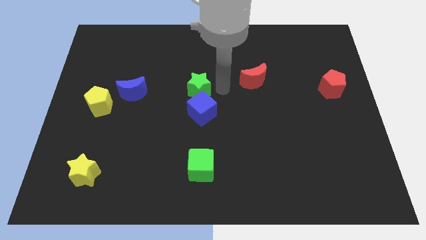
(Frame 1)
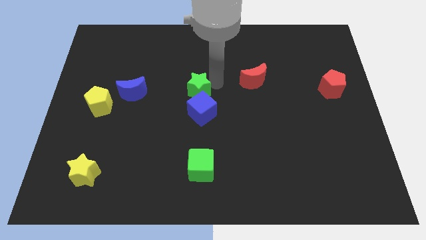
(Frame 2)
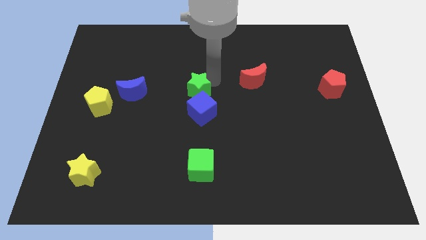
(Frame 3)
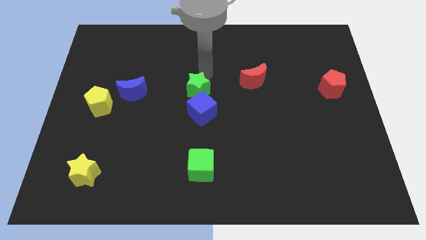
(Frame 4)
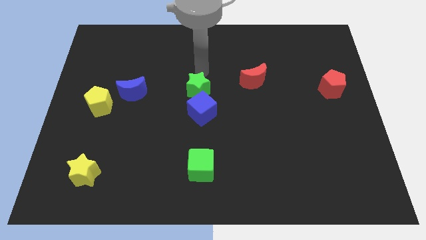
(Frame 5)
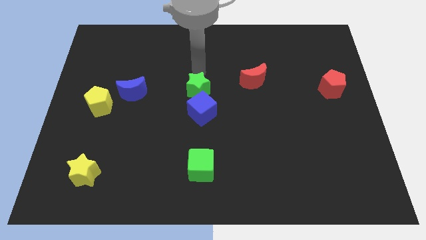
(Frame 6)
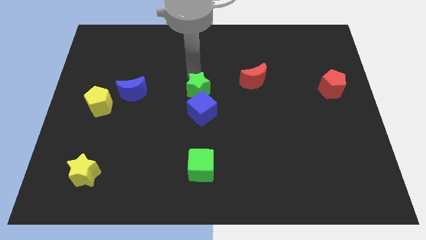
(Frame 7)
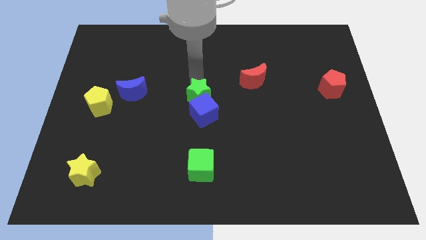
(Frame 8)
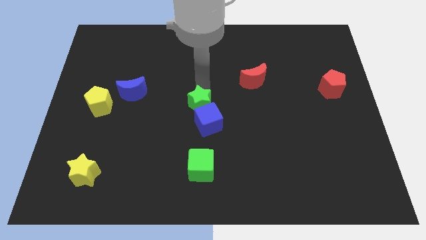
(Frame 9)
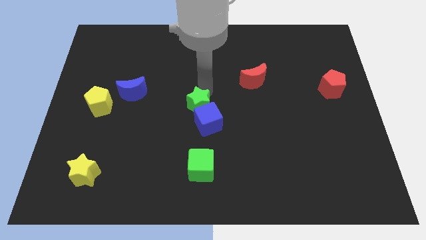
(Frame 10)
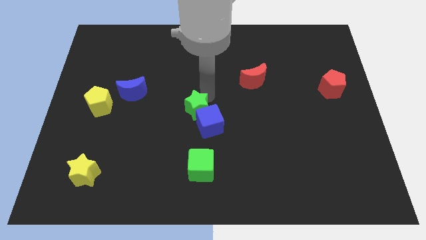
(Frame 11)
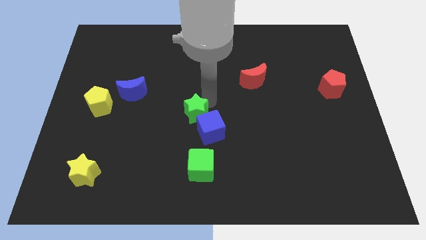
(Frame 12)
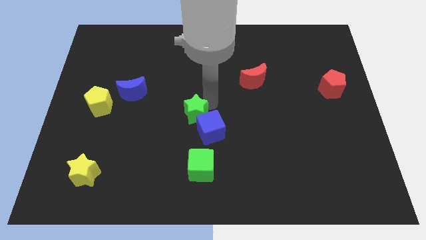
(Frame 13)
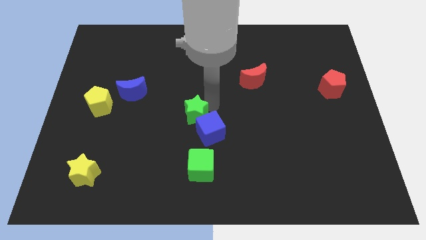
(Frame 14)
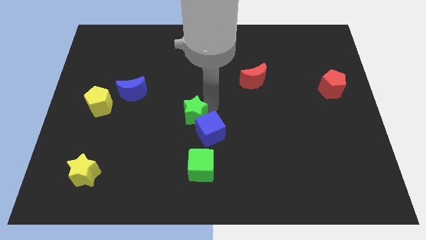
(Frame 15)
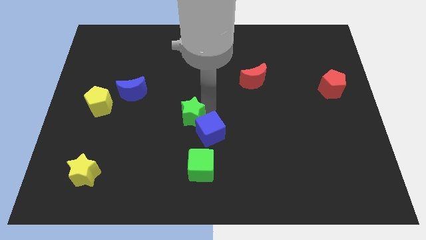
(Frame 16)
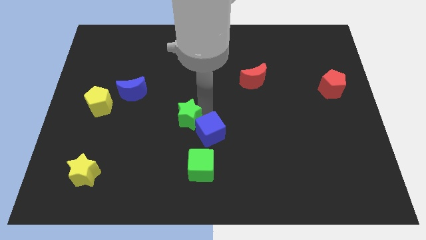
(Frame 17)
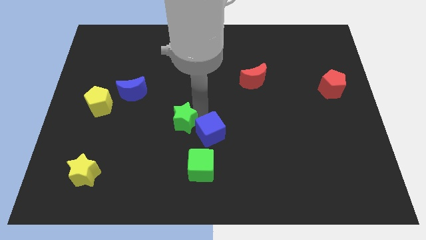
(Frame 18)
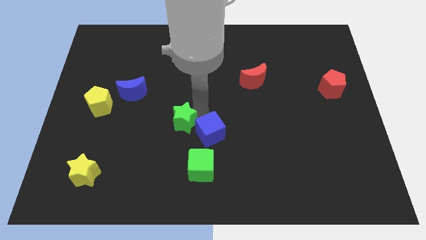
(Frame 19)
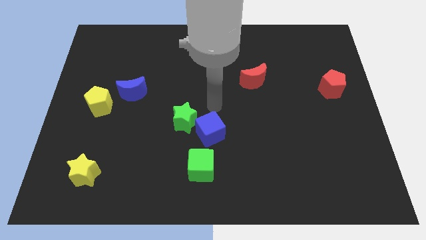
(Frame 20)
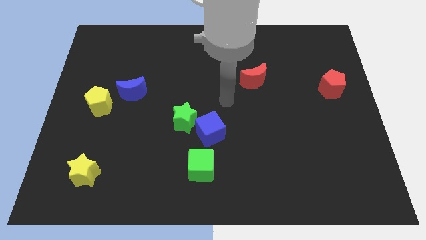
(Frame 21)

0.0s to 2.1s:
slide green star diagonally top left to the blue cube

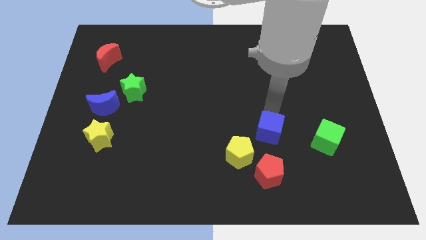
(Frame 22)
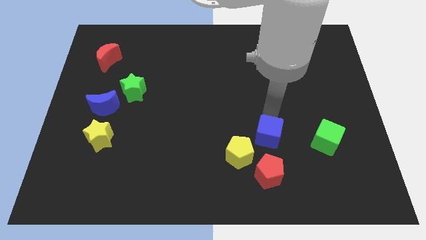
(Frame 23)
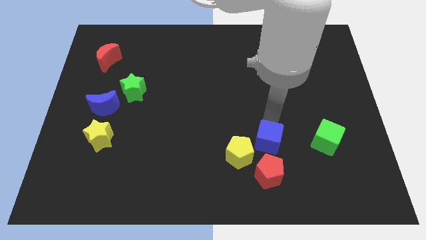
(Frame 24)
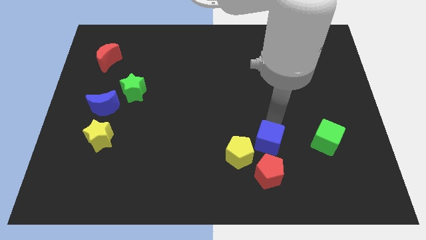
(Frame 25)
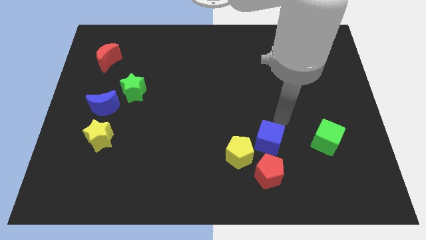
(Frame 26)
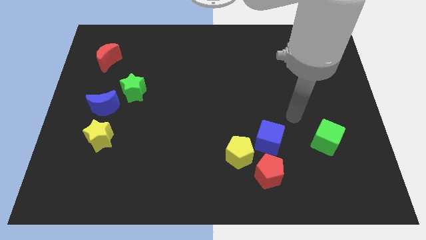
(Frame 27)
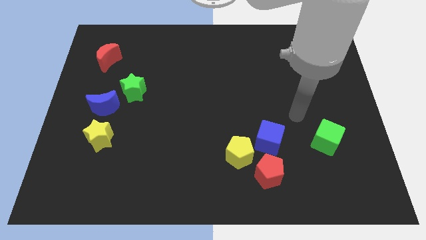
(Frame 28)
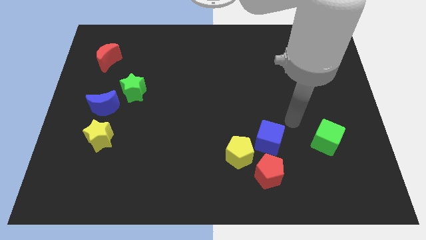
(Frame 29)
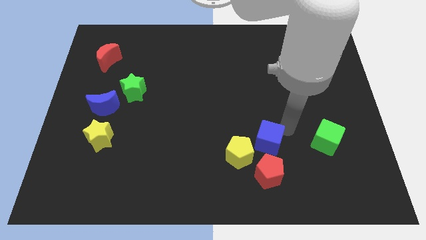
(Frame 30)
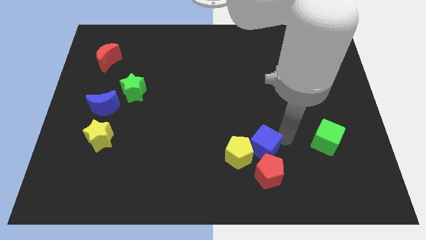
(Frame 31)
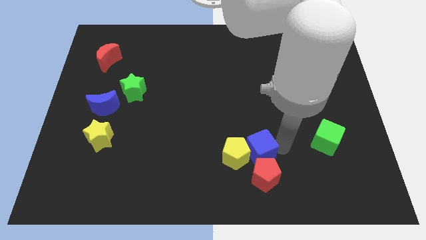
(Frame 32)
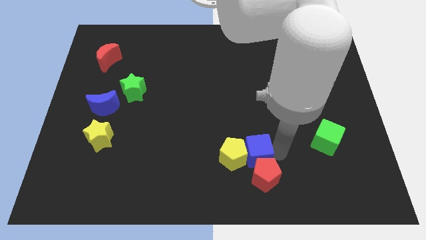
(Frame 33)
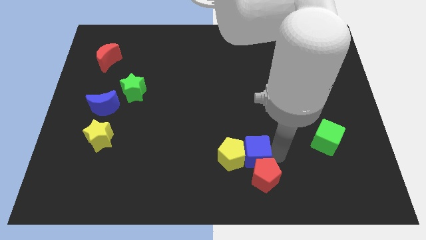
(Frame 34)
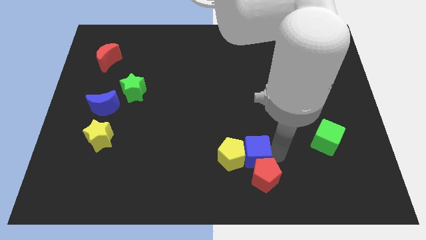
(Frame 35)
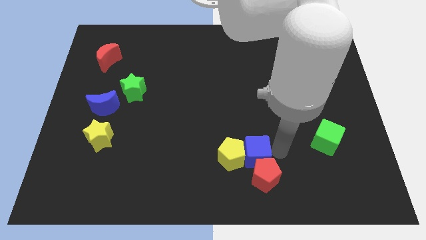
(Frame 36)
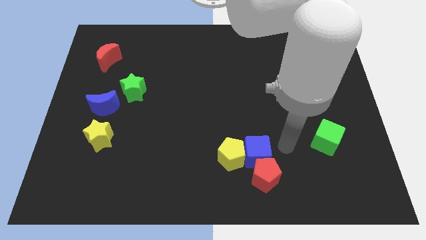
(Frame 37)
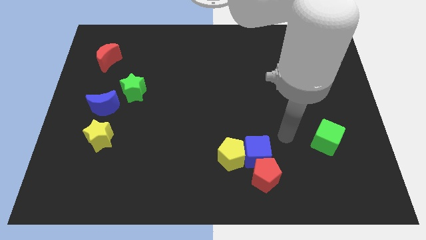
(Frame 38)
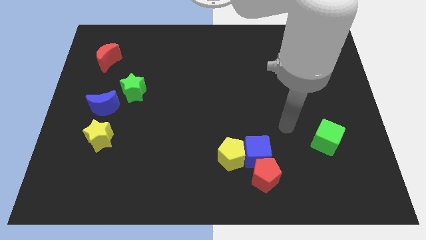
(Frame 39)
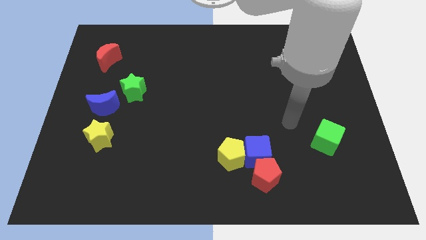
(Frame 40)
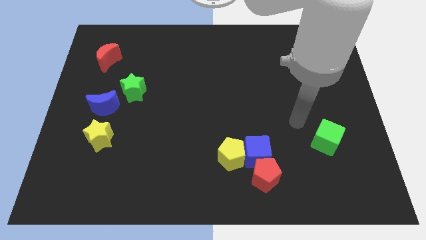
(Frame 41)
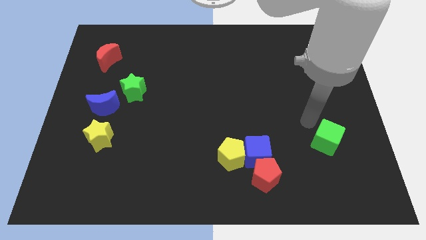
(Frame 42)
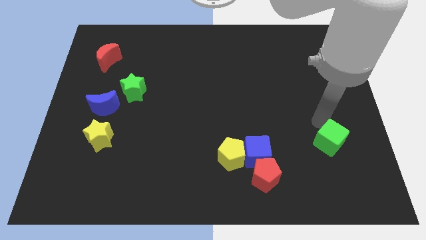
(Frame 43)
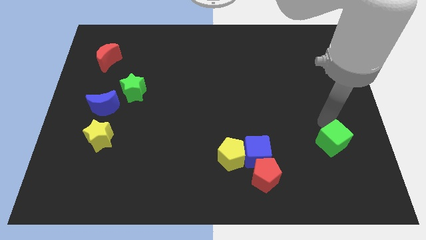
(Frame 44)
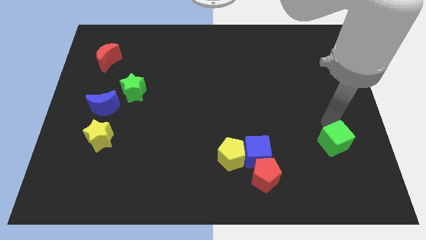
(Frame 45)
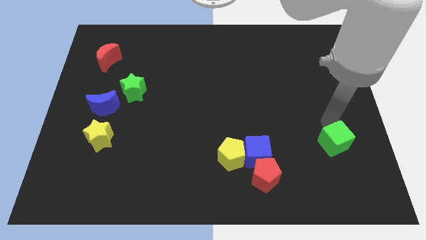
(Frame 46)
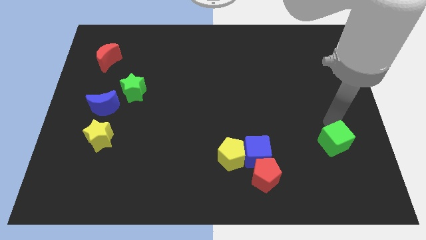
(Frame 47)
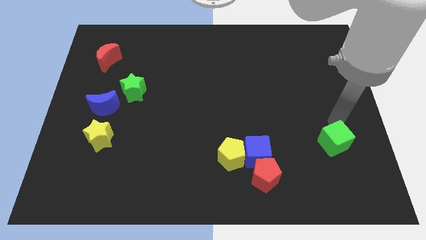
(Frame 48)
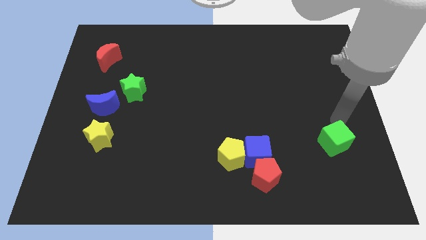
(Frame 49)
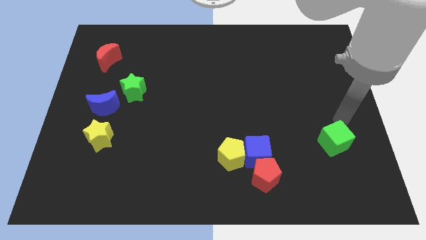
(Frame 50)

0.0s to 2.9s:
push the blue cube into right of the yellow pentagon

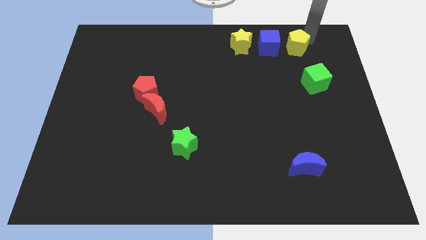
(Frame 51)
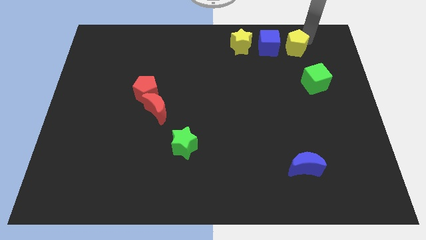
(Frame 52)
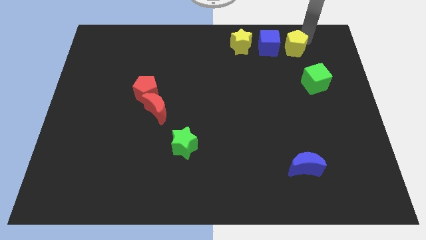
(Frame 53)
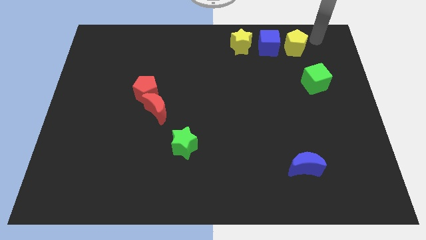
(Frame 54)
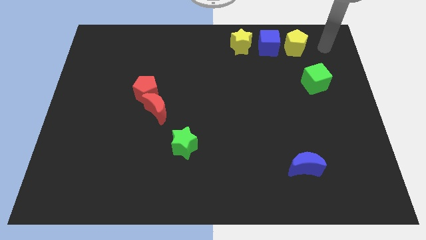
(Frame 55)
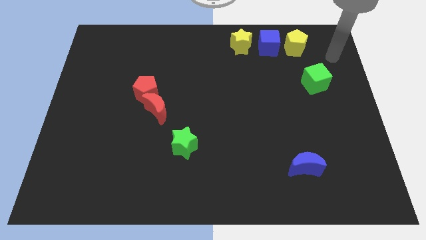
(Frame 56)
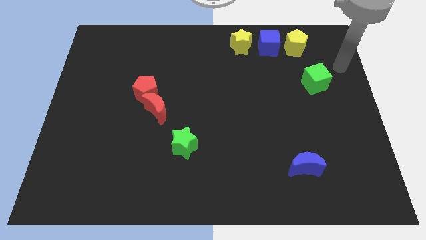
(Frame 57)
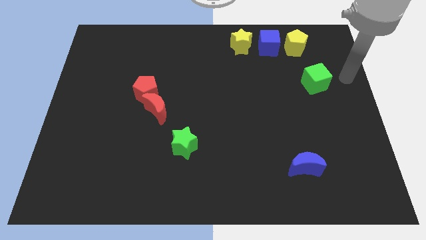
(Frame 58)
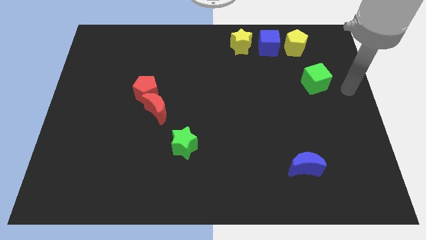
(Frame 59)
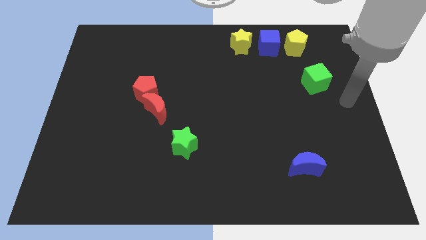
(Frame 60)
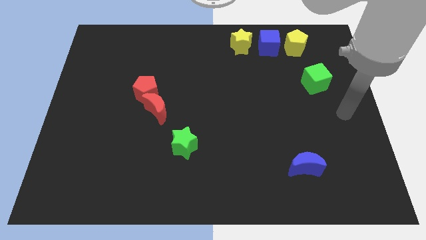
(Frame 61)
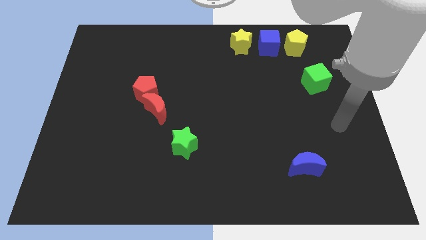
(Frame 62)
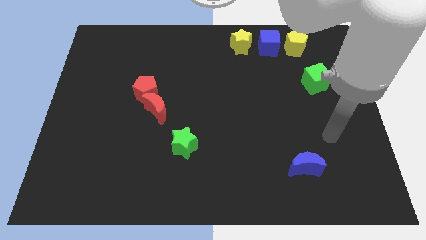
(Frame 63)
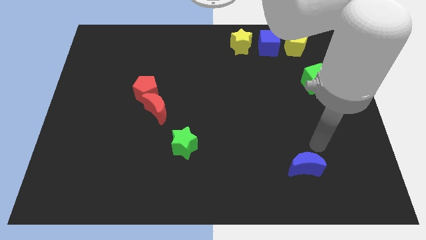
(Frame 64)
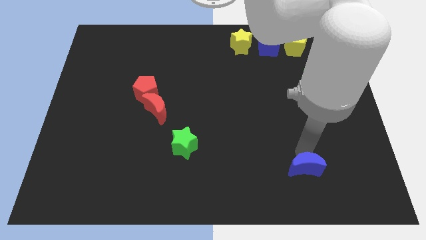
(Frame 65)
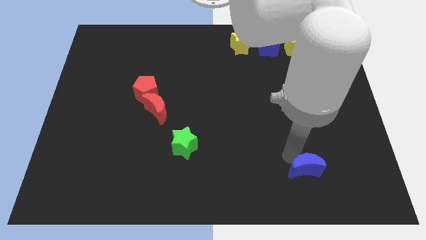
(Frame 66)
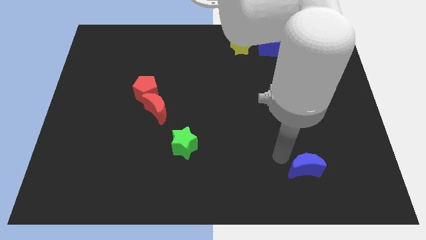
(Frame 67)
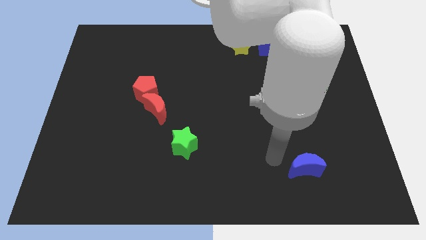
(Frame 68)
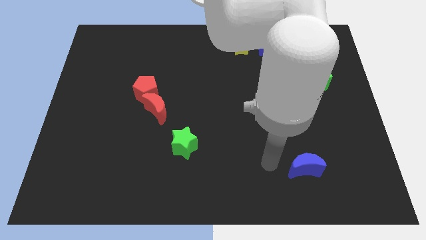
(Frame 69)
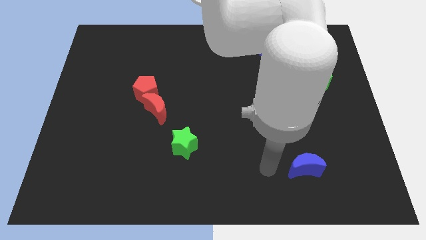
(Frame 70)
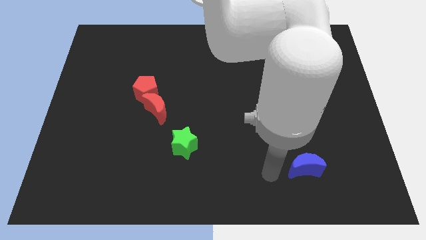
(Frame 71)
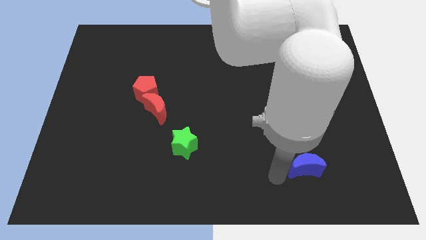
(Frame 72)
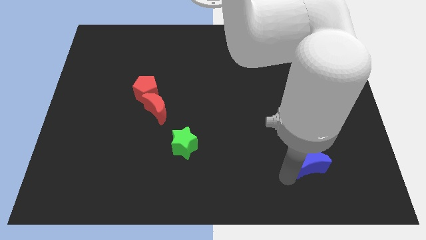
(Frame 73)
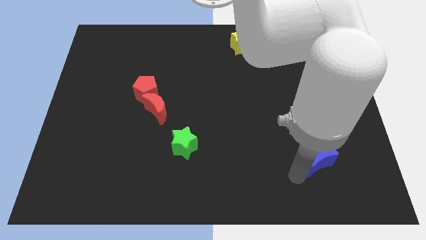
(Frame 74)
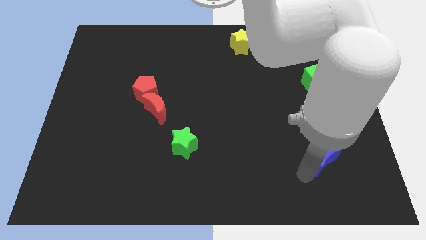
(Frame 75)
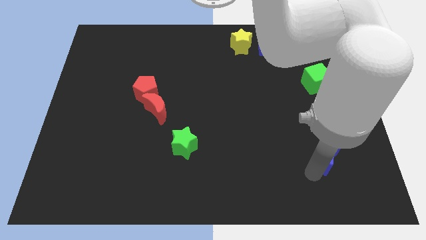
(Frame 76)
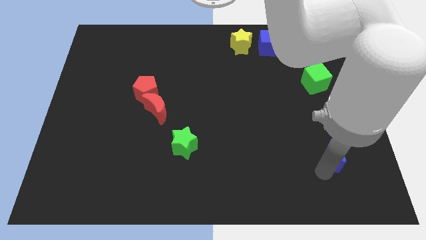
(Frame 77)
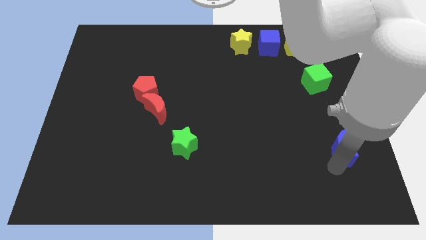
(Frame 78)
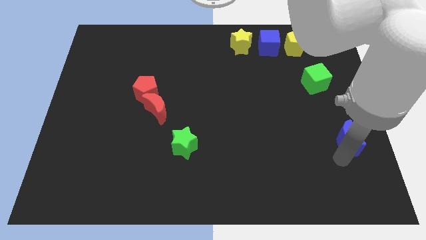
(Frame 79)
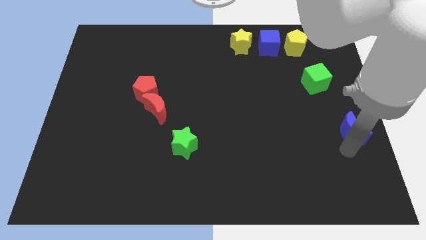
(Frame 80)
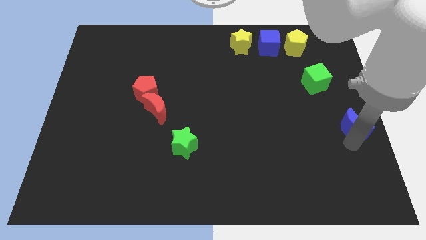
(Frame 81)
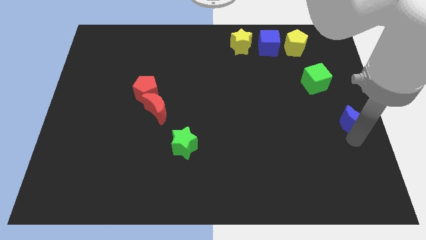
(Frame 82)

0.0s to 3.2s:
slide the blue crescent towards the center right

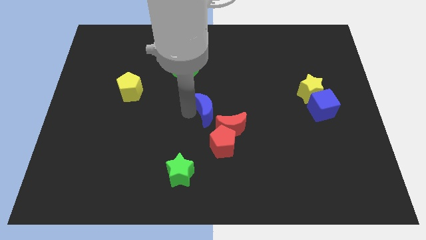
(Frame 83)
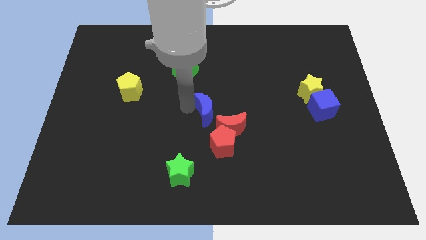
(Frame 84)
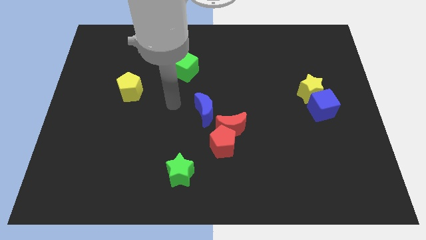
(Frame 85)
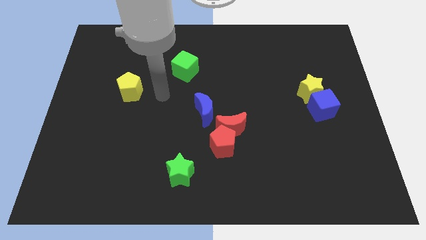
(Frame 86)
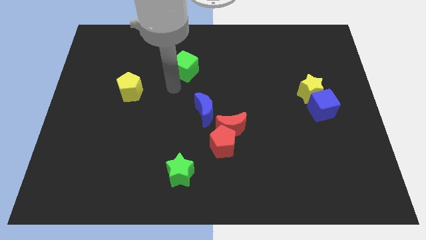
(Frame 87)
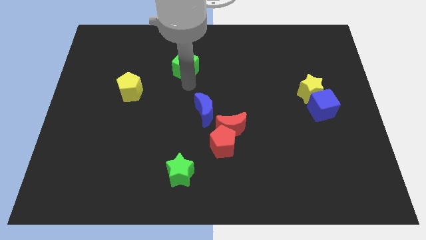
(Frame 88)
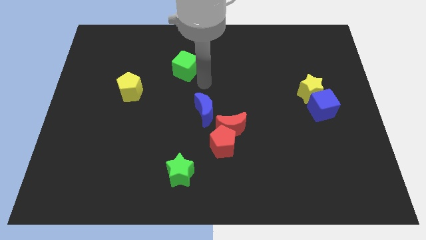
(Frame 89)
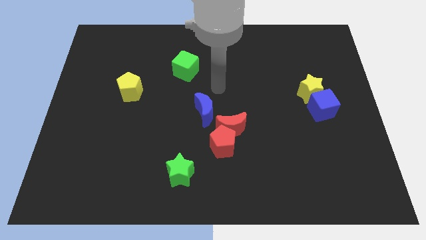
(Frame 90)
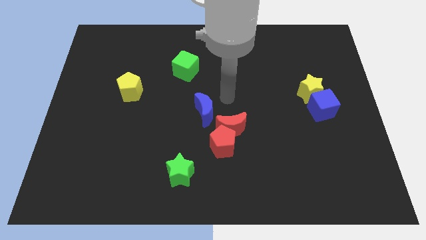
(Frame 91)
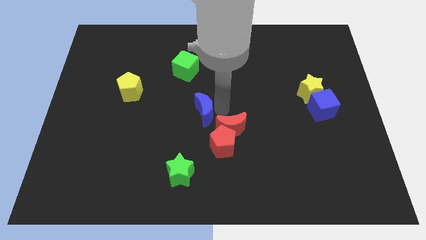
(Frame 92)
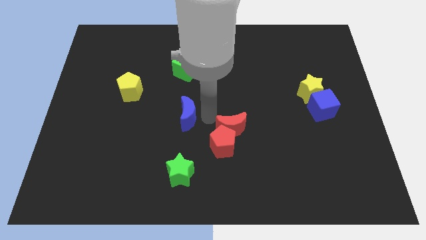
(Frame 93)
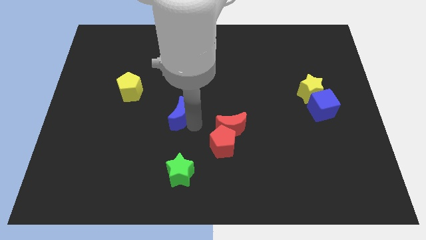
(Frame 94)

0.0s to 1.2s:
push the blue crescent towards the center left side of the board
